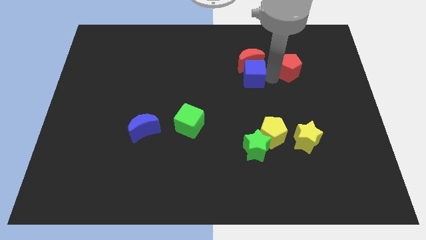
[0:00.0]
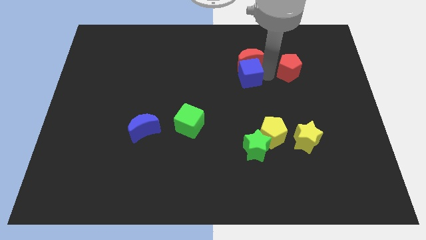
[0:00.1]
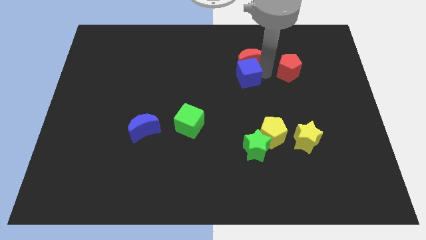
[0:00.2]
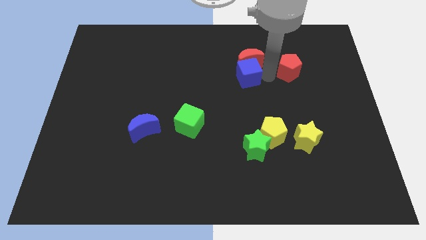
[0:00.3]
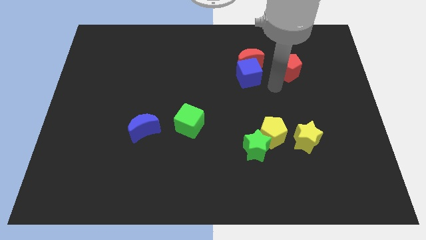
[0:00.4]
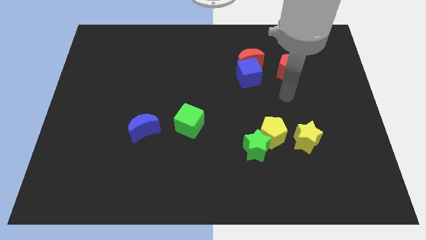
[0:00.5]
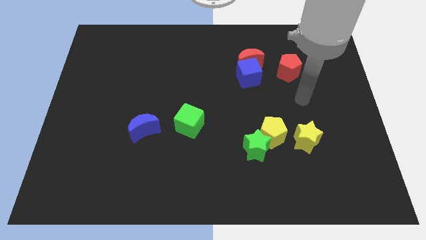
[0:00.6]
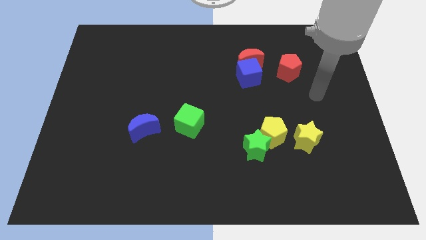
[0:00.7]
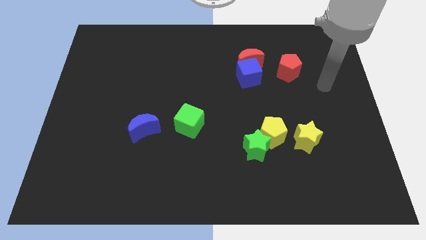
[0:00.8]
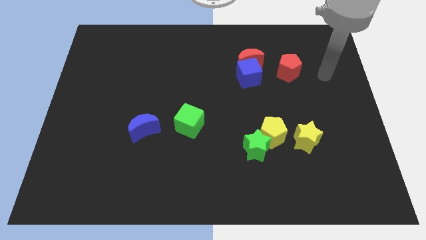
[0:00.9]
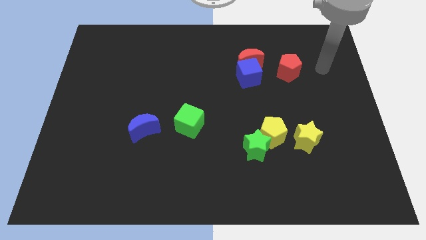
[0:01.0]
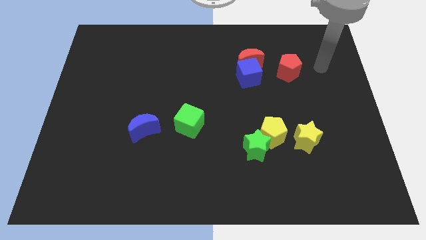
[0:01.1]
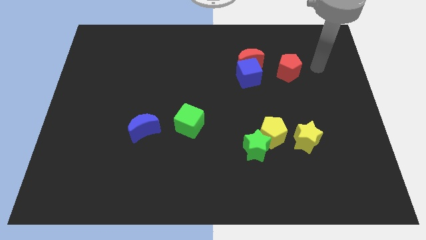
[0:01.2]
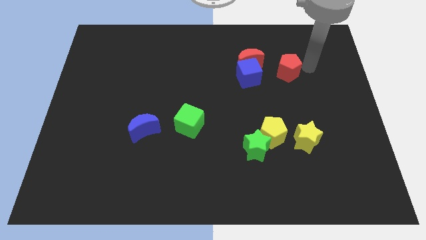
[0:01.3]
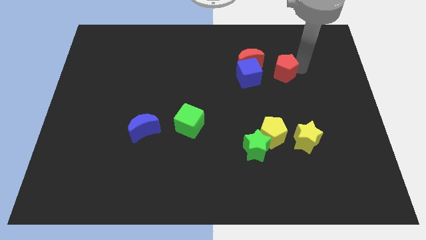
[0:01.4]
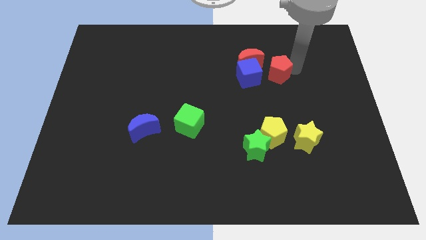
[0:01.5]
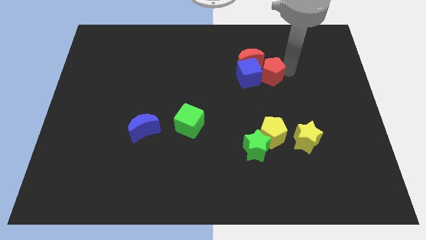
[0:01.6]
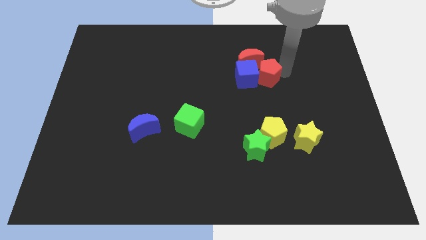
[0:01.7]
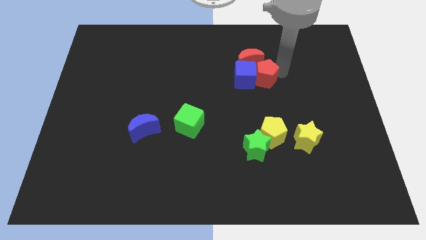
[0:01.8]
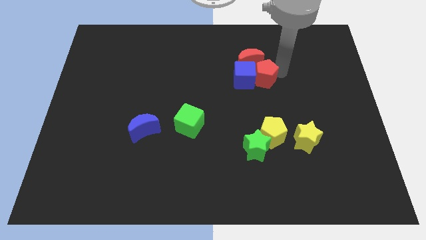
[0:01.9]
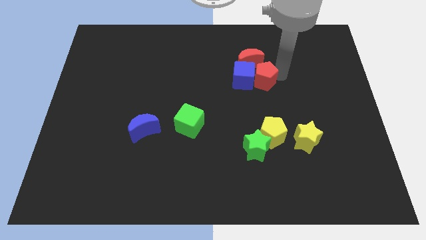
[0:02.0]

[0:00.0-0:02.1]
place the red pentagon right next to blue cube

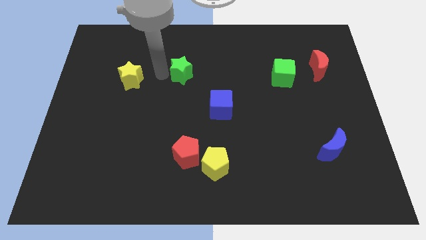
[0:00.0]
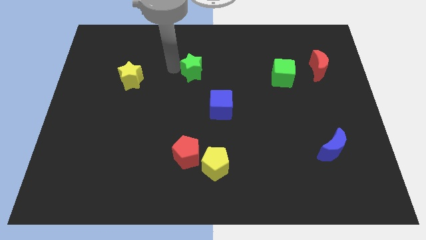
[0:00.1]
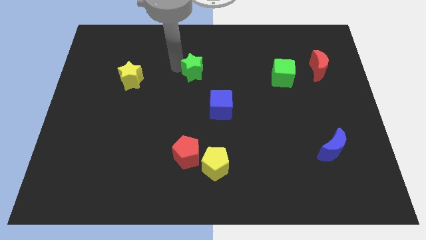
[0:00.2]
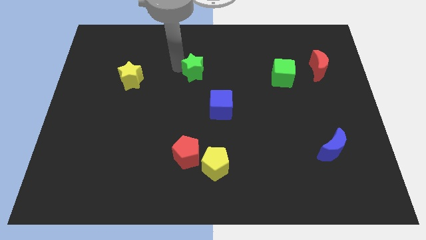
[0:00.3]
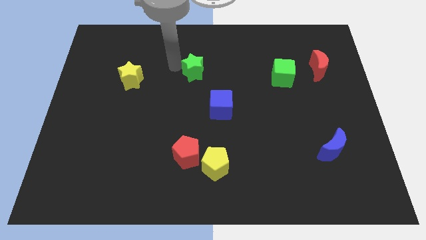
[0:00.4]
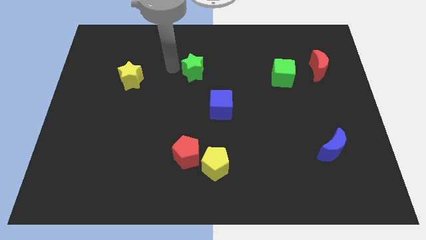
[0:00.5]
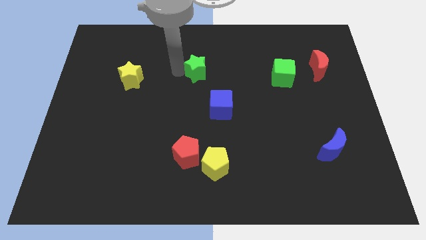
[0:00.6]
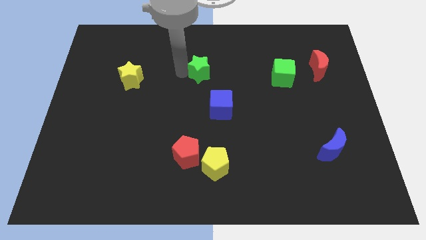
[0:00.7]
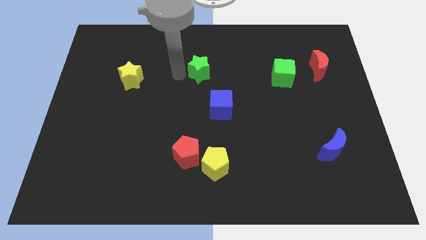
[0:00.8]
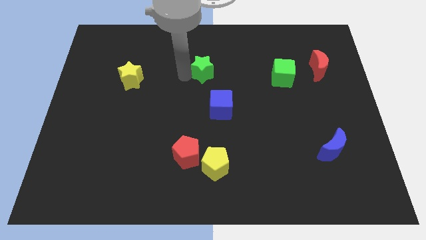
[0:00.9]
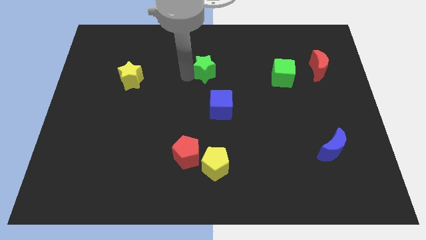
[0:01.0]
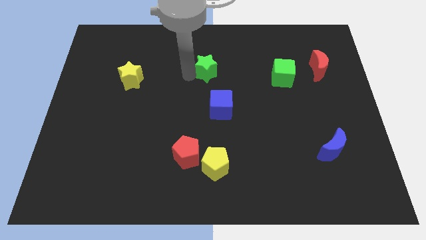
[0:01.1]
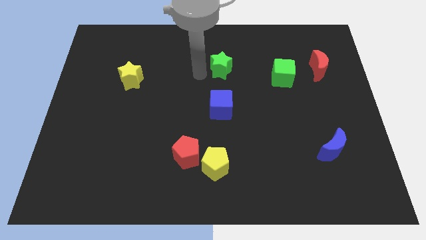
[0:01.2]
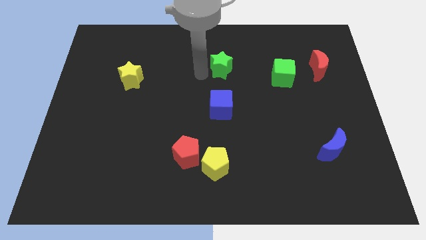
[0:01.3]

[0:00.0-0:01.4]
move the green star above the blue cube

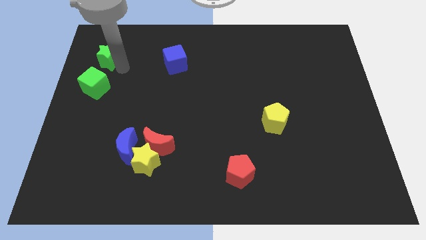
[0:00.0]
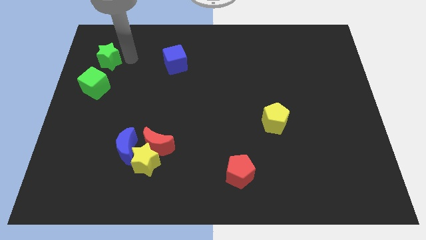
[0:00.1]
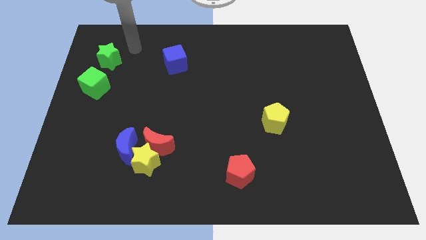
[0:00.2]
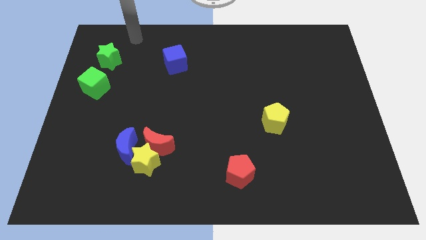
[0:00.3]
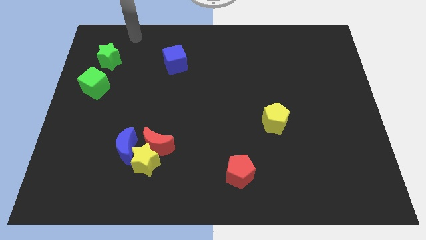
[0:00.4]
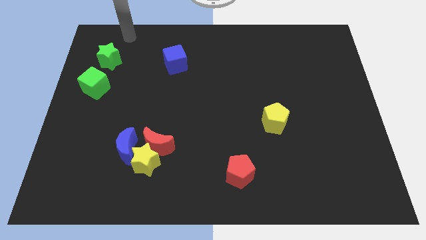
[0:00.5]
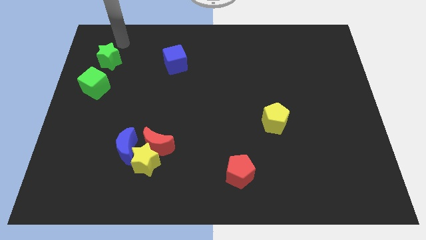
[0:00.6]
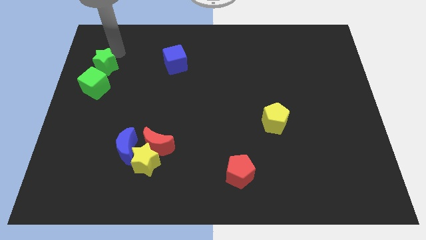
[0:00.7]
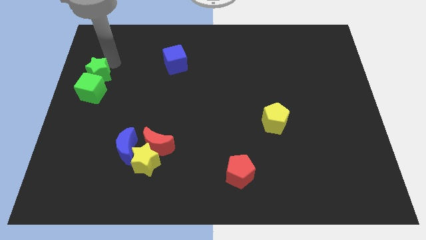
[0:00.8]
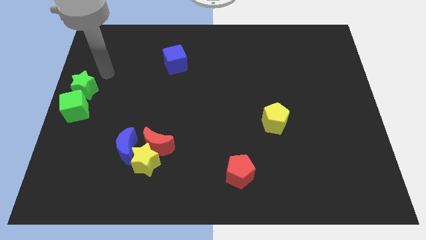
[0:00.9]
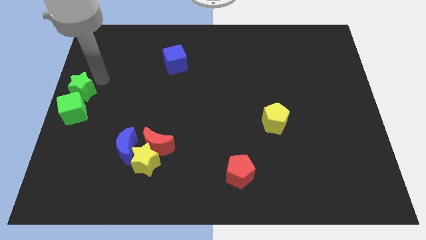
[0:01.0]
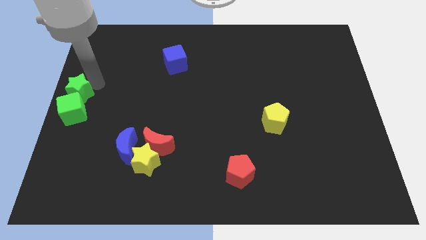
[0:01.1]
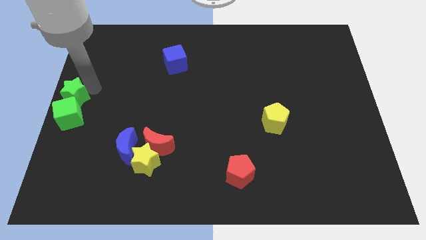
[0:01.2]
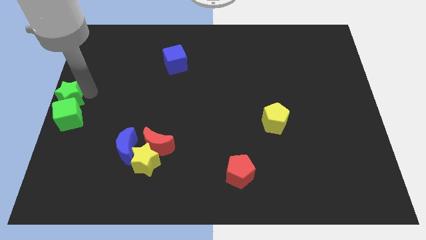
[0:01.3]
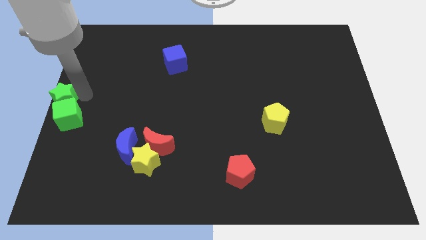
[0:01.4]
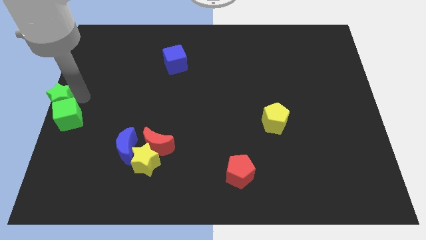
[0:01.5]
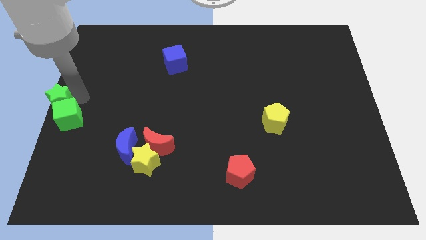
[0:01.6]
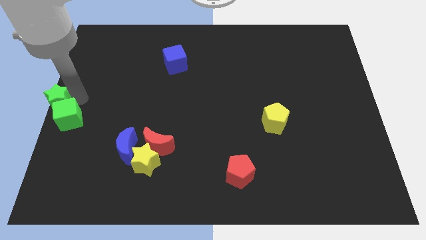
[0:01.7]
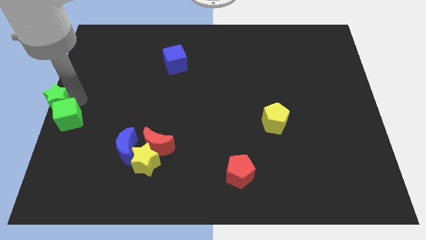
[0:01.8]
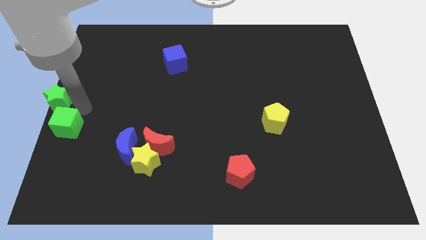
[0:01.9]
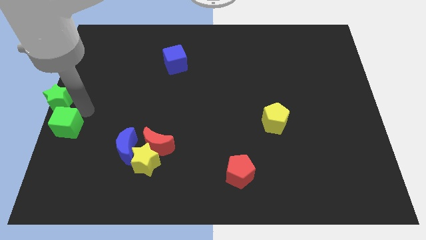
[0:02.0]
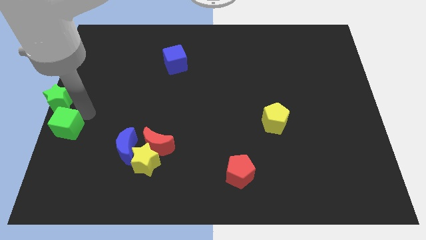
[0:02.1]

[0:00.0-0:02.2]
move the green star and green cube together in the center left

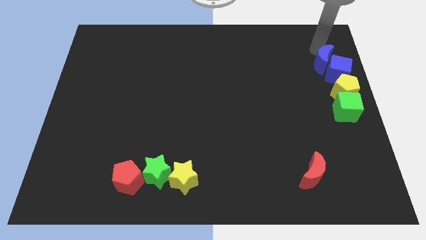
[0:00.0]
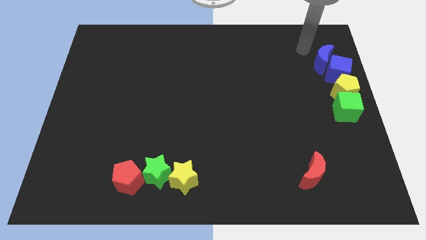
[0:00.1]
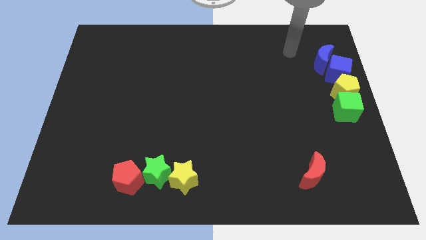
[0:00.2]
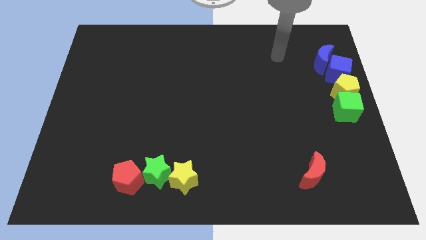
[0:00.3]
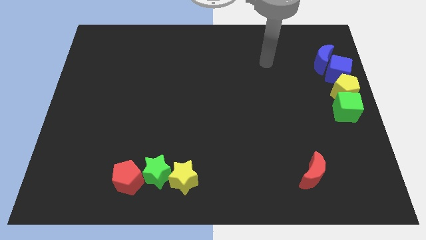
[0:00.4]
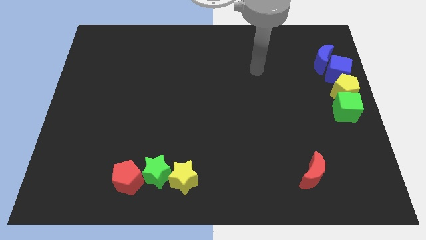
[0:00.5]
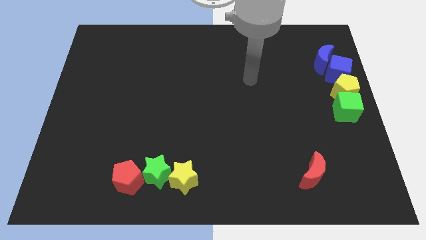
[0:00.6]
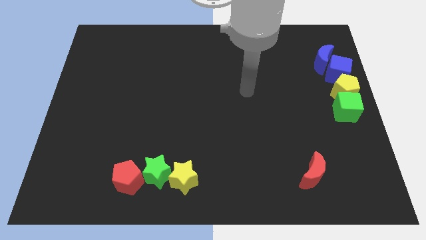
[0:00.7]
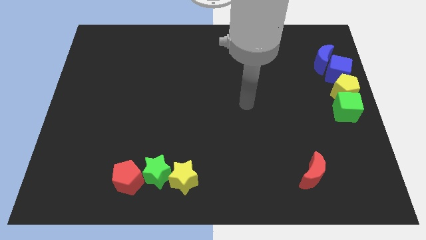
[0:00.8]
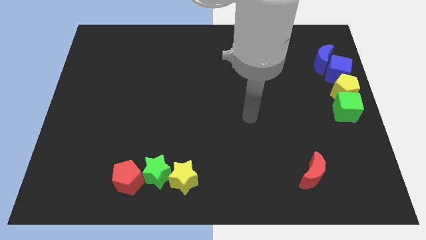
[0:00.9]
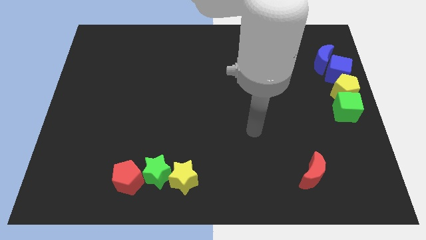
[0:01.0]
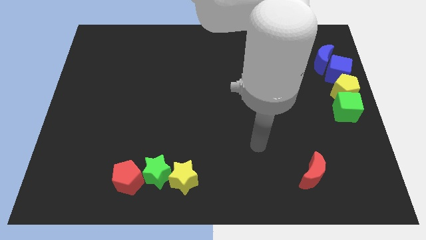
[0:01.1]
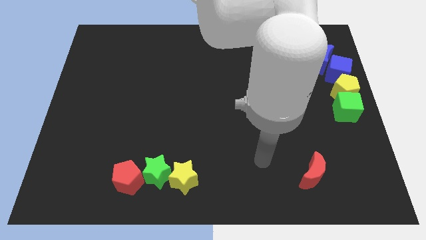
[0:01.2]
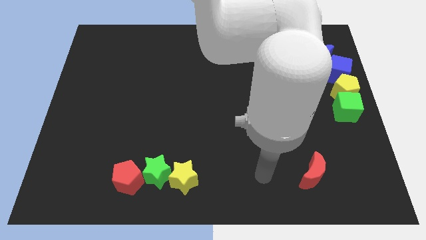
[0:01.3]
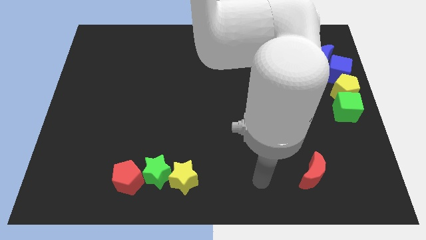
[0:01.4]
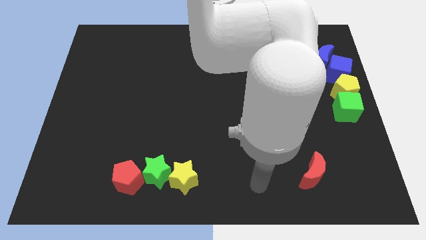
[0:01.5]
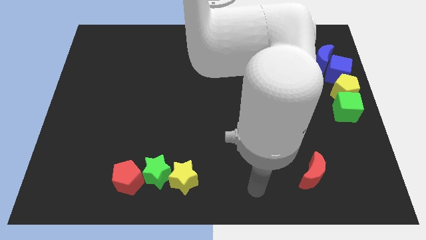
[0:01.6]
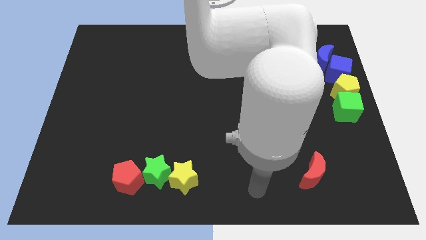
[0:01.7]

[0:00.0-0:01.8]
move your arm away from the blue moon

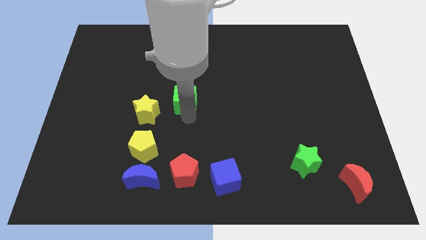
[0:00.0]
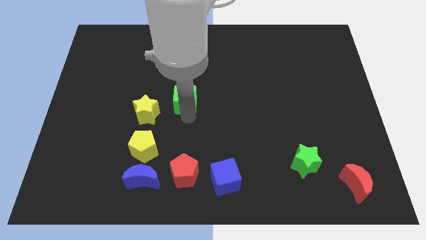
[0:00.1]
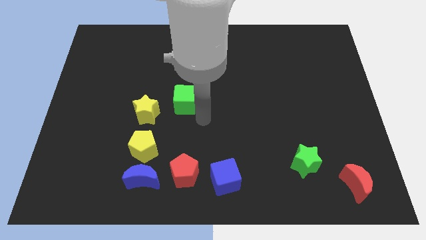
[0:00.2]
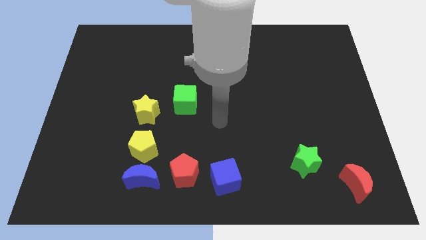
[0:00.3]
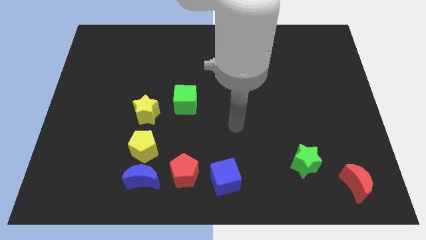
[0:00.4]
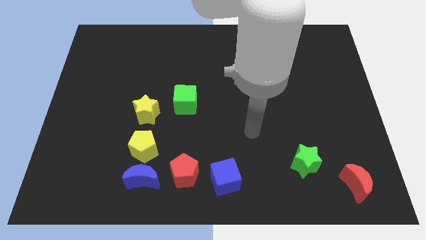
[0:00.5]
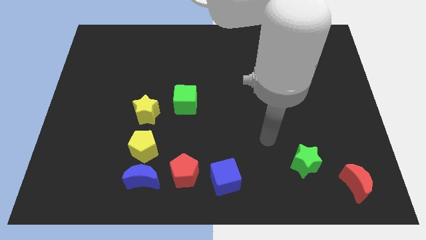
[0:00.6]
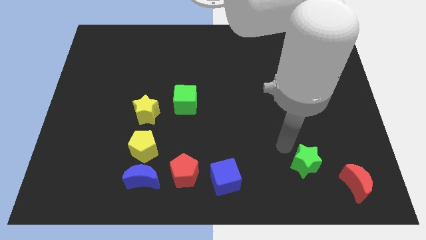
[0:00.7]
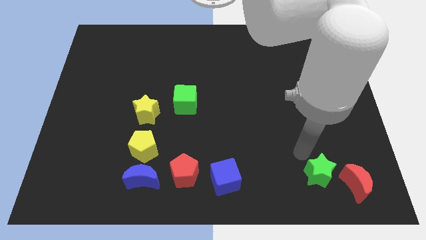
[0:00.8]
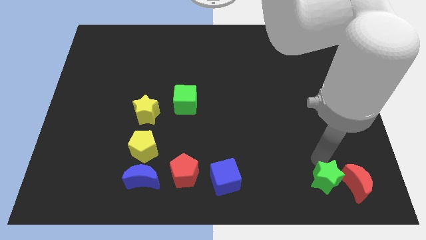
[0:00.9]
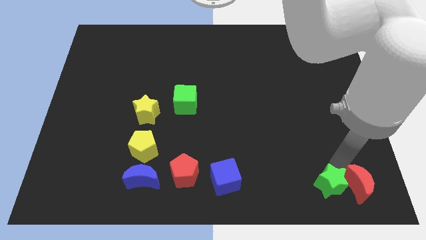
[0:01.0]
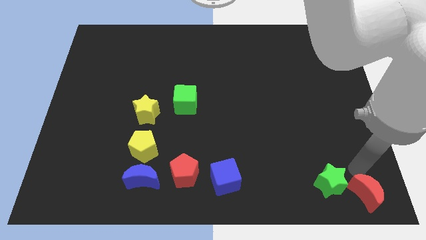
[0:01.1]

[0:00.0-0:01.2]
push the green star downwards slightly

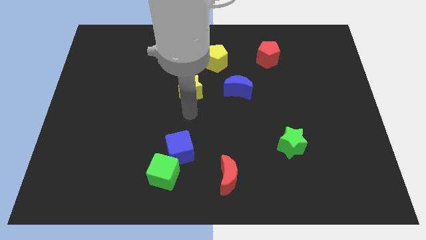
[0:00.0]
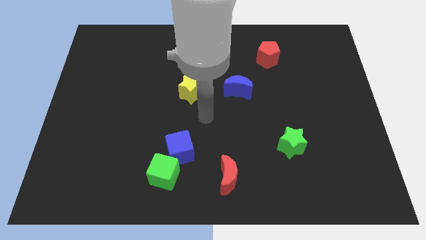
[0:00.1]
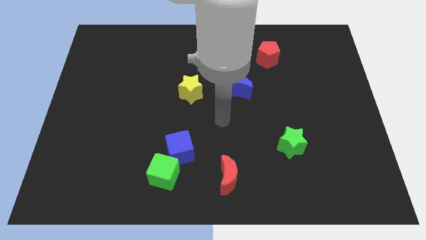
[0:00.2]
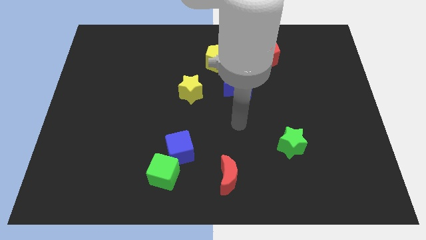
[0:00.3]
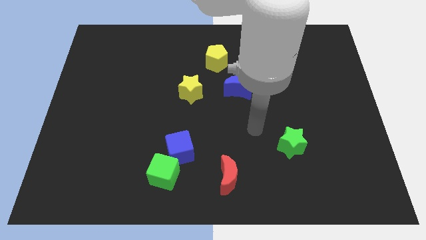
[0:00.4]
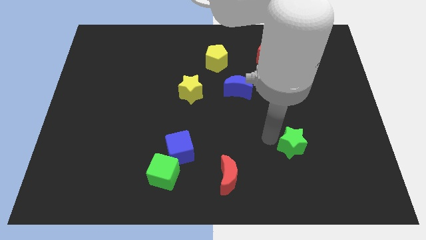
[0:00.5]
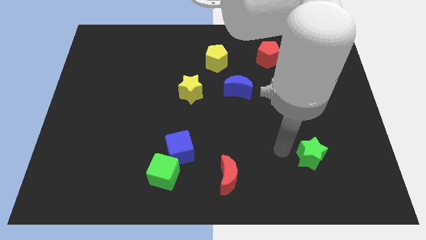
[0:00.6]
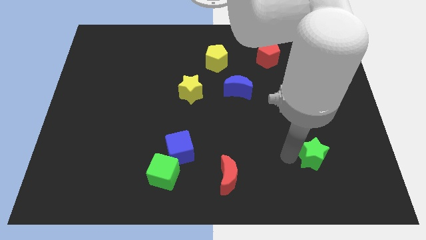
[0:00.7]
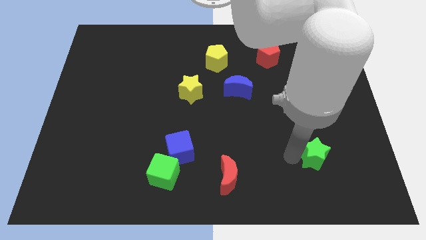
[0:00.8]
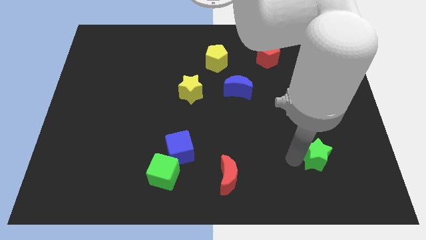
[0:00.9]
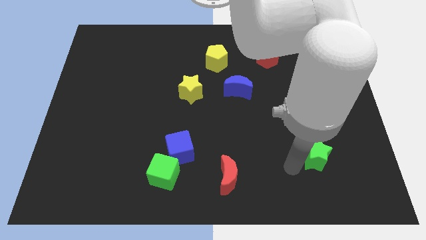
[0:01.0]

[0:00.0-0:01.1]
push the green star to the right side
